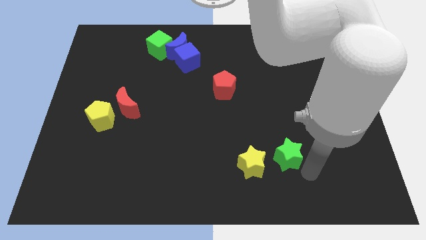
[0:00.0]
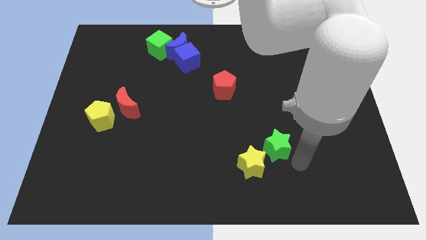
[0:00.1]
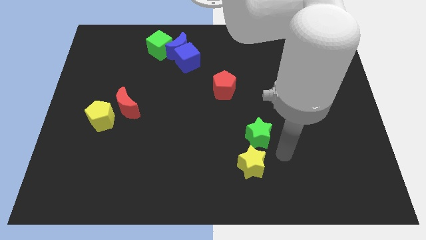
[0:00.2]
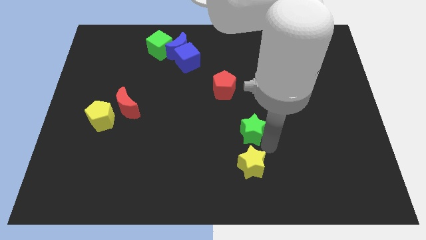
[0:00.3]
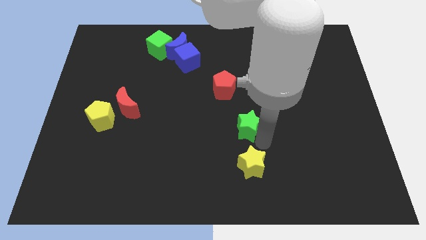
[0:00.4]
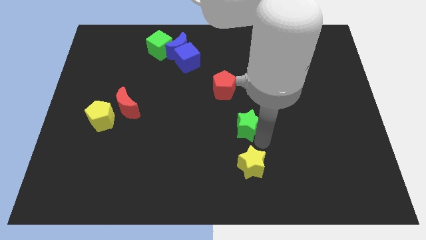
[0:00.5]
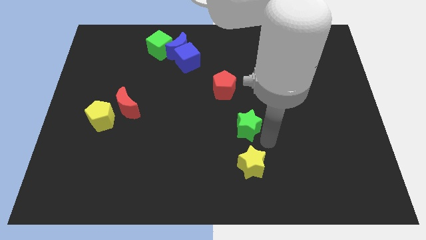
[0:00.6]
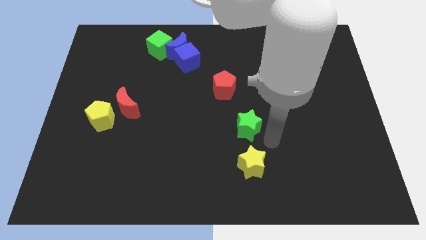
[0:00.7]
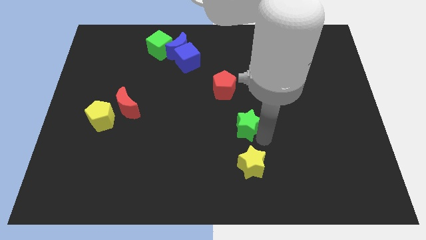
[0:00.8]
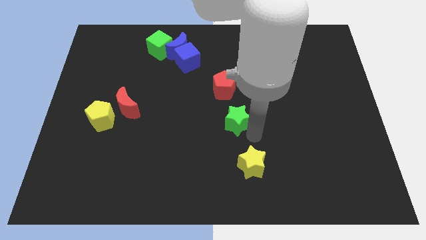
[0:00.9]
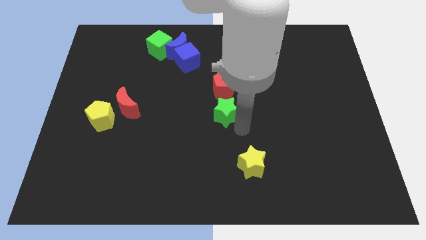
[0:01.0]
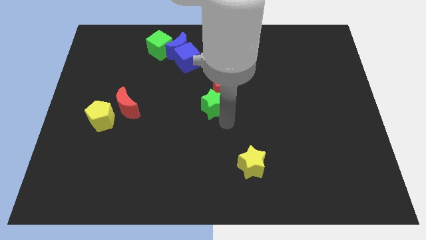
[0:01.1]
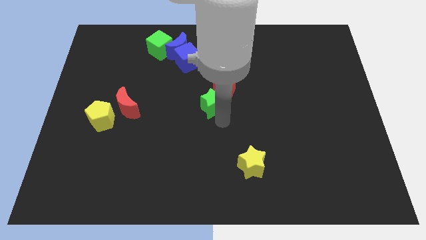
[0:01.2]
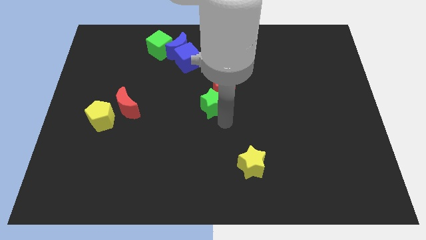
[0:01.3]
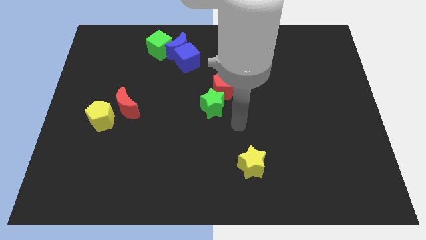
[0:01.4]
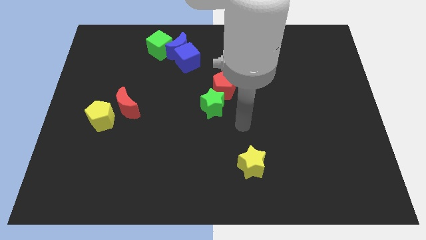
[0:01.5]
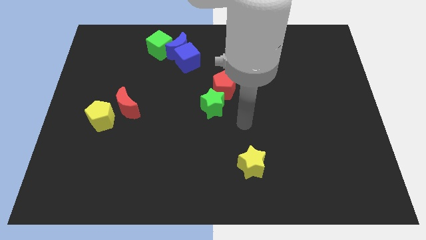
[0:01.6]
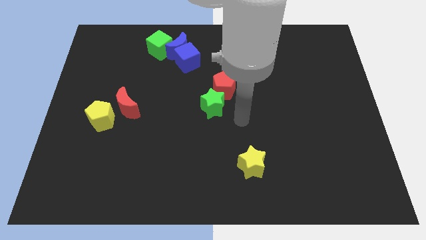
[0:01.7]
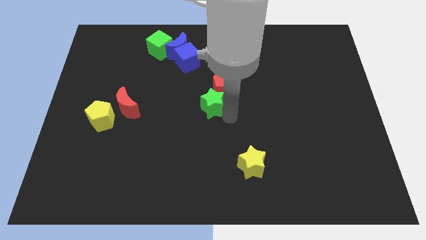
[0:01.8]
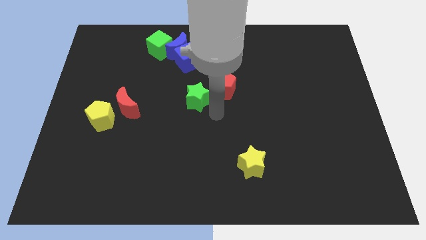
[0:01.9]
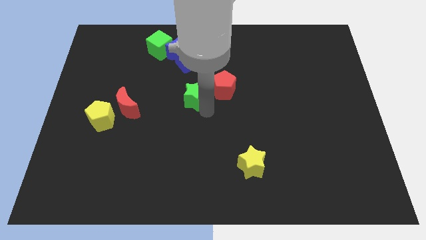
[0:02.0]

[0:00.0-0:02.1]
move the green star towards the bottom left of the red pentagon

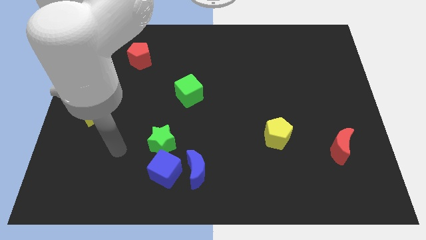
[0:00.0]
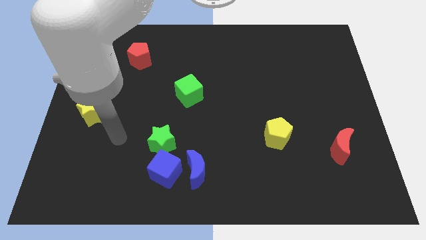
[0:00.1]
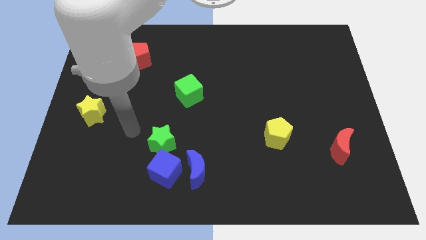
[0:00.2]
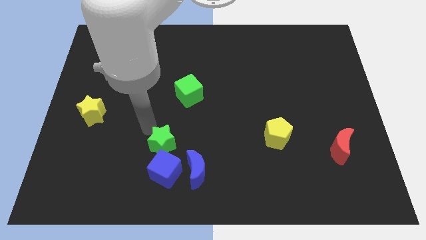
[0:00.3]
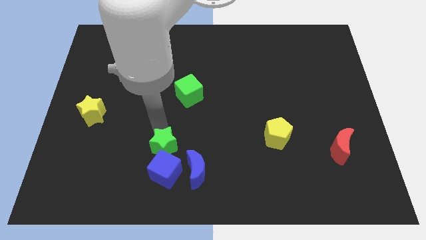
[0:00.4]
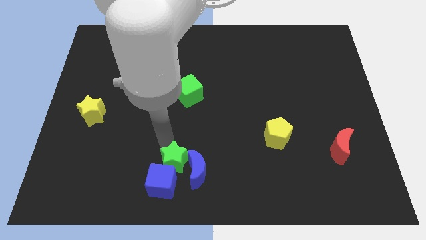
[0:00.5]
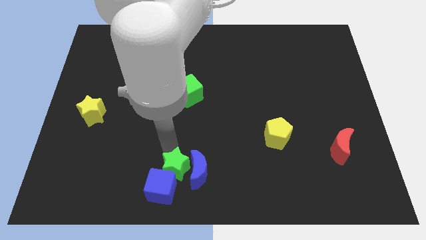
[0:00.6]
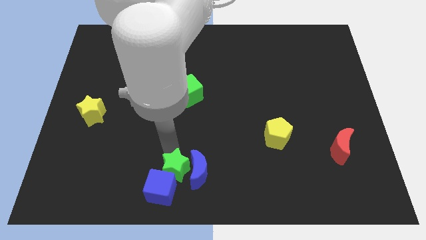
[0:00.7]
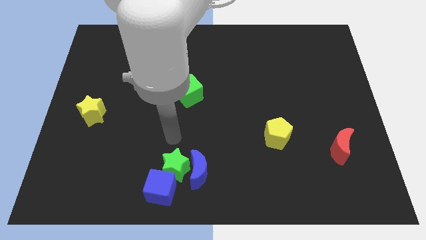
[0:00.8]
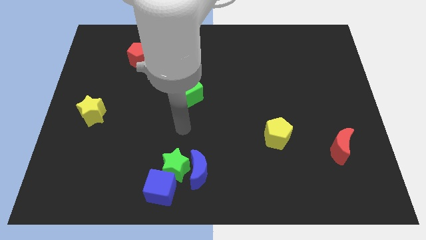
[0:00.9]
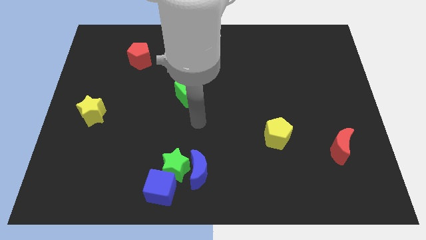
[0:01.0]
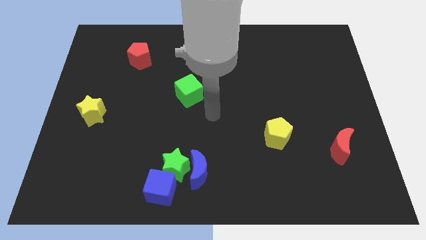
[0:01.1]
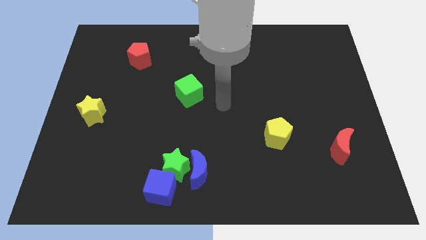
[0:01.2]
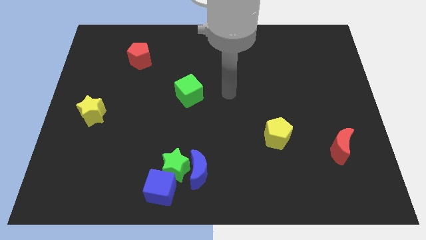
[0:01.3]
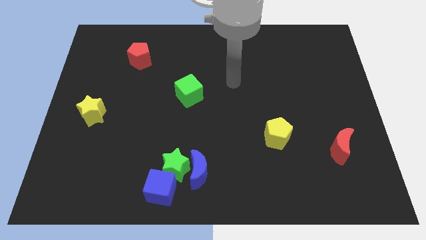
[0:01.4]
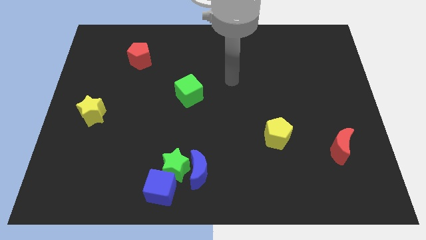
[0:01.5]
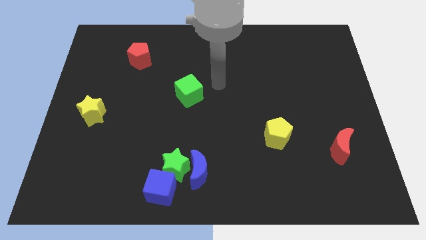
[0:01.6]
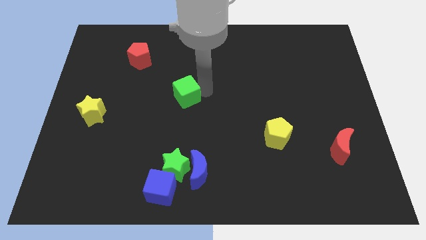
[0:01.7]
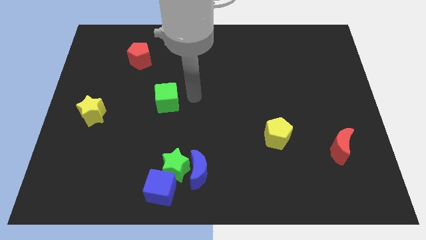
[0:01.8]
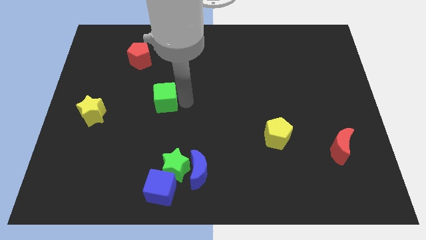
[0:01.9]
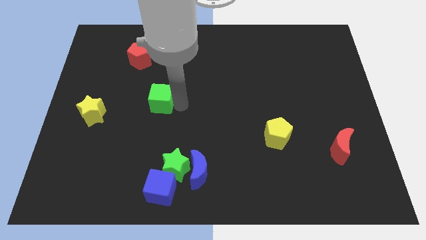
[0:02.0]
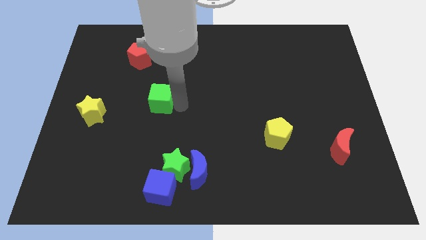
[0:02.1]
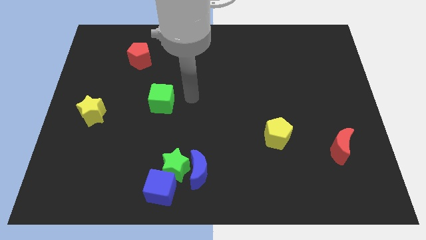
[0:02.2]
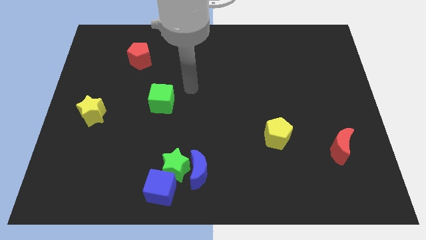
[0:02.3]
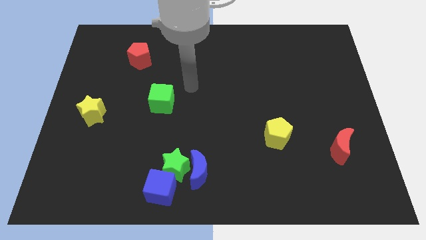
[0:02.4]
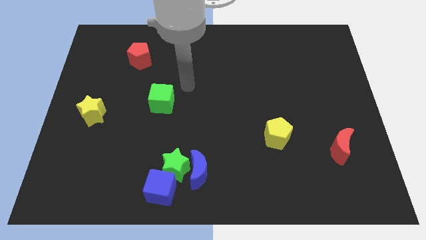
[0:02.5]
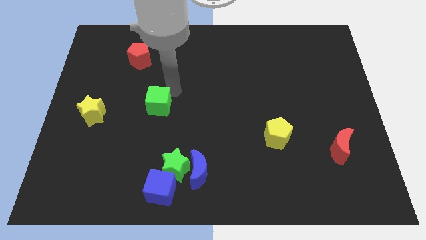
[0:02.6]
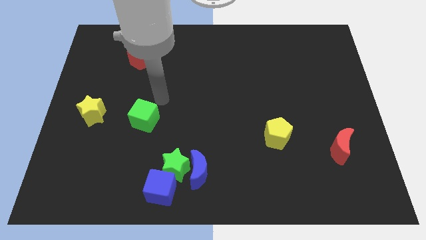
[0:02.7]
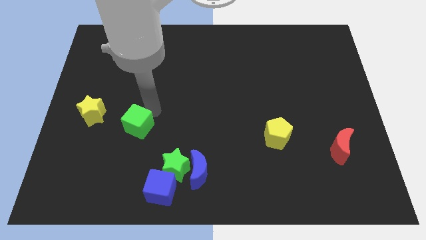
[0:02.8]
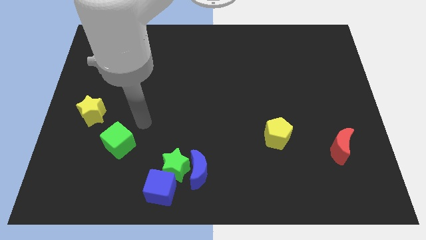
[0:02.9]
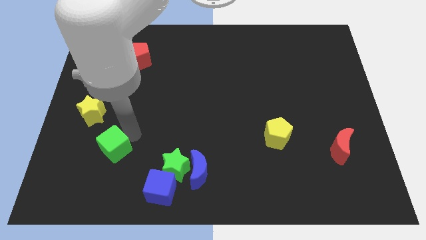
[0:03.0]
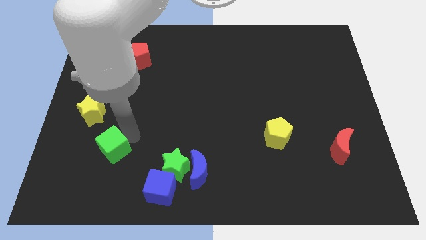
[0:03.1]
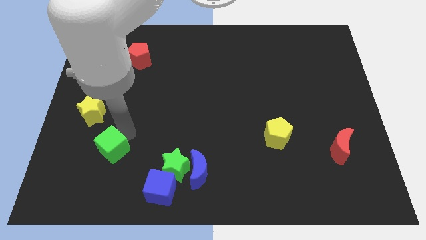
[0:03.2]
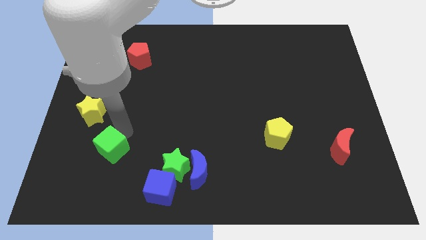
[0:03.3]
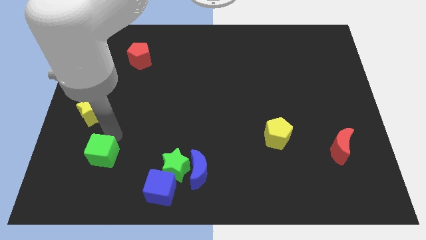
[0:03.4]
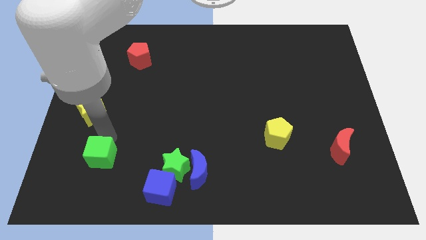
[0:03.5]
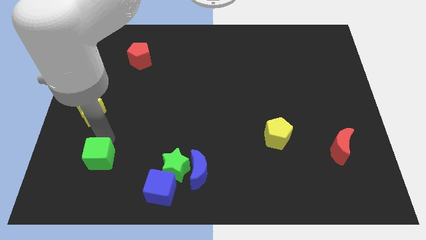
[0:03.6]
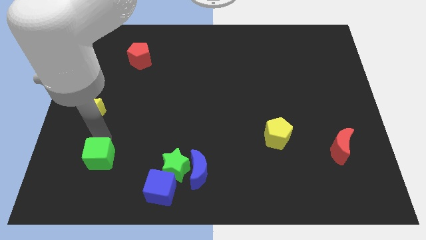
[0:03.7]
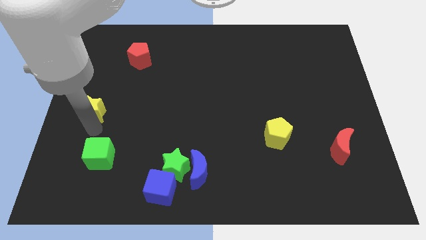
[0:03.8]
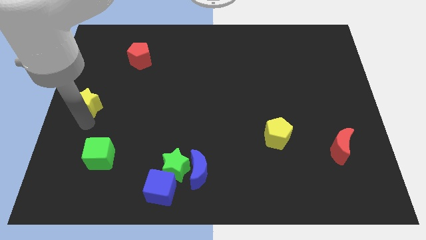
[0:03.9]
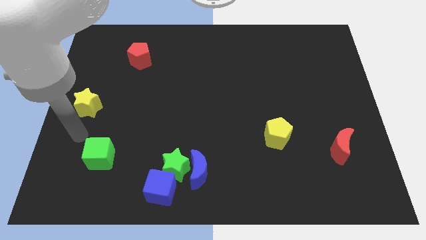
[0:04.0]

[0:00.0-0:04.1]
place the green cube parallel to the blue cube

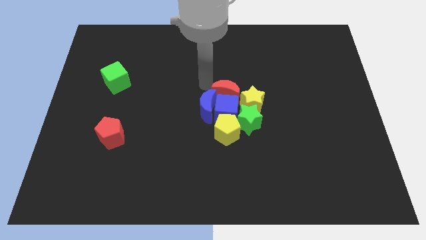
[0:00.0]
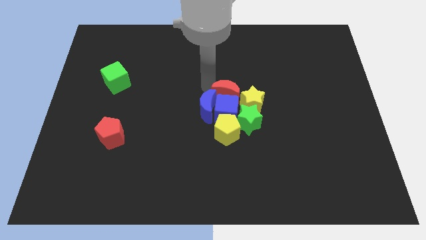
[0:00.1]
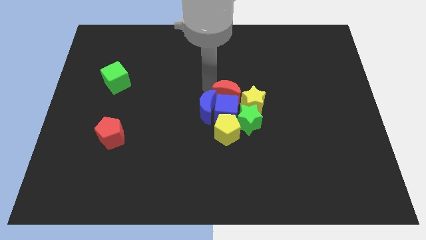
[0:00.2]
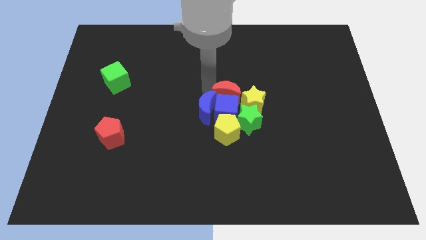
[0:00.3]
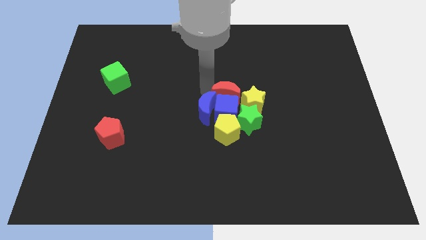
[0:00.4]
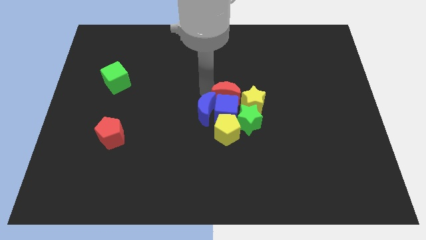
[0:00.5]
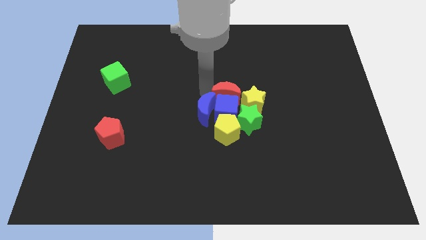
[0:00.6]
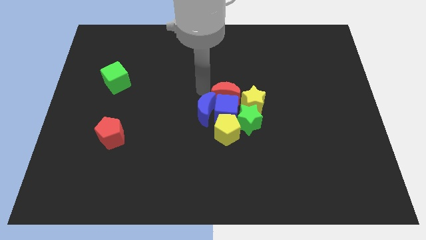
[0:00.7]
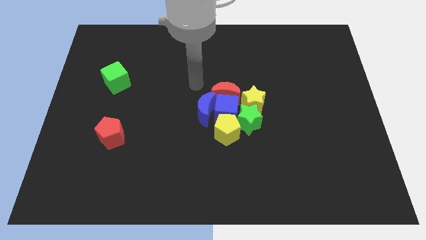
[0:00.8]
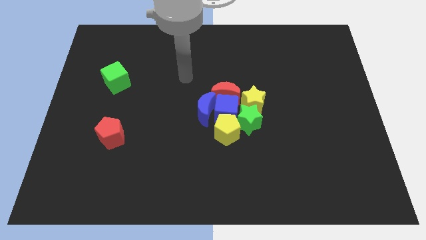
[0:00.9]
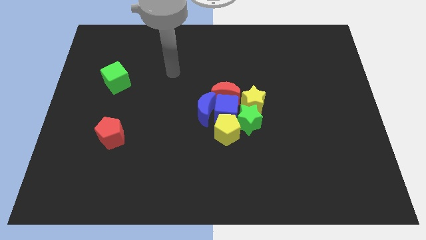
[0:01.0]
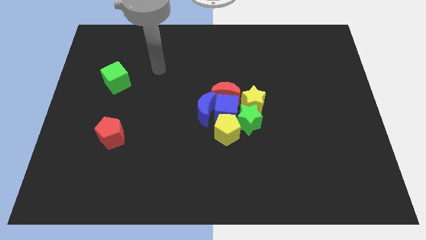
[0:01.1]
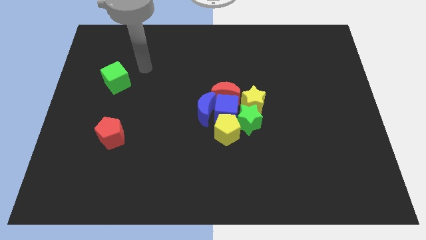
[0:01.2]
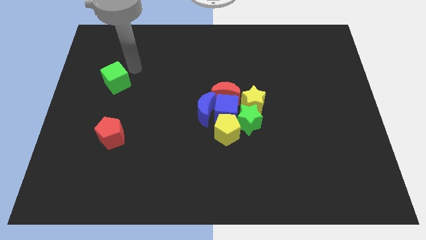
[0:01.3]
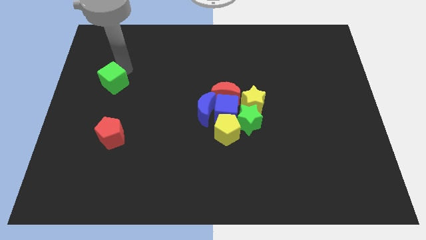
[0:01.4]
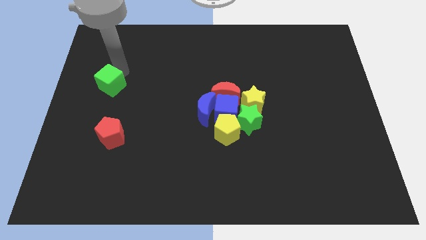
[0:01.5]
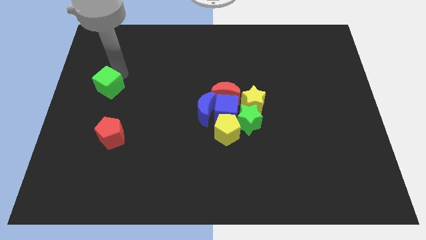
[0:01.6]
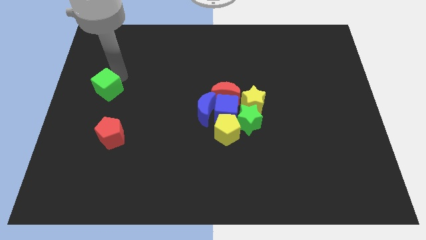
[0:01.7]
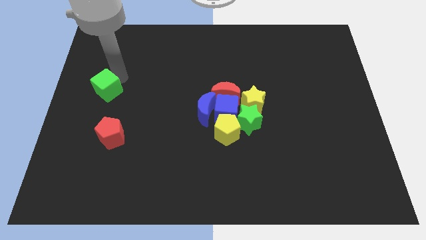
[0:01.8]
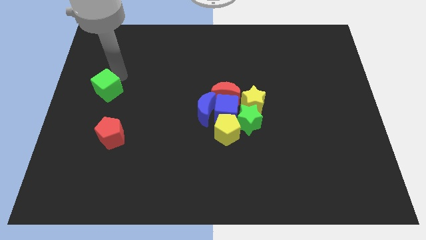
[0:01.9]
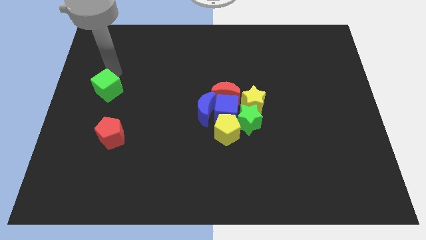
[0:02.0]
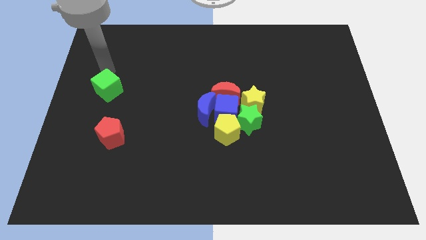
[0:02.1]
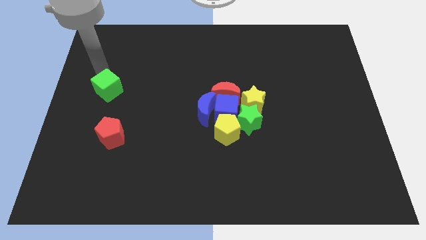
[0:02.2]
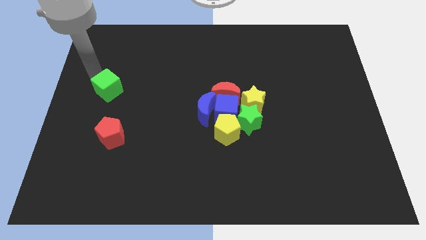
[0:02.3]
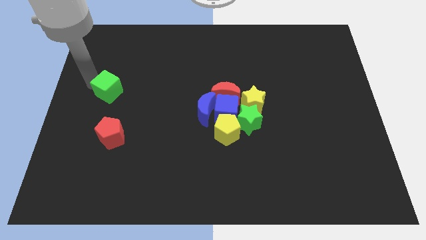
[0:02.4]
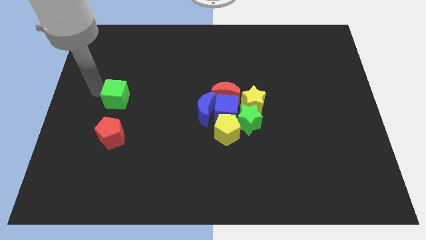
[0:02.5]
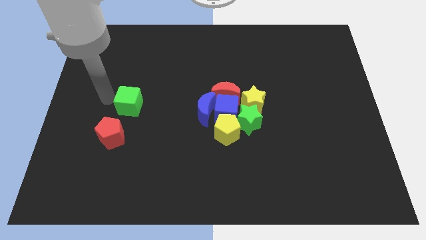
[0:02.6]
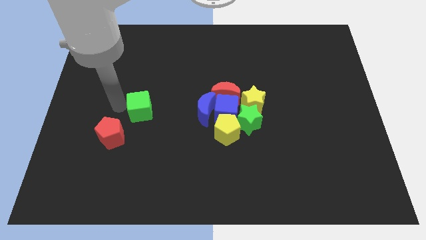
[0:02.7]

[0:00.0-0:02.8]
push the green cube towards the group of blocks
